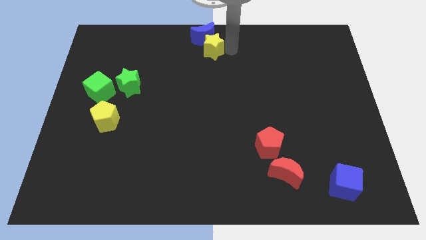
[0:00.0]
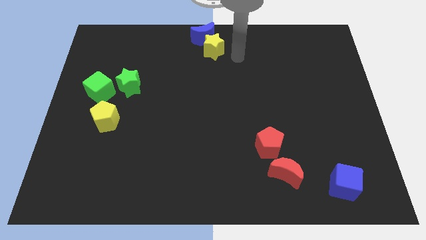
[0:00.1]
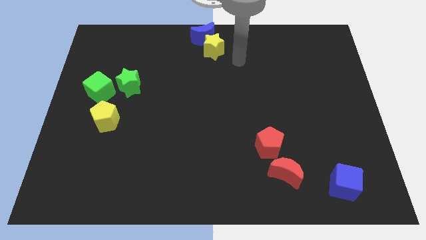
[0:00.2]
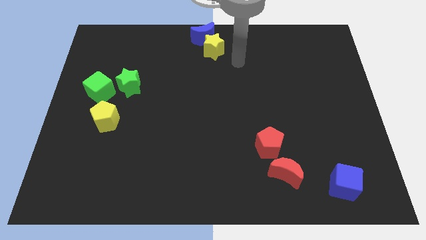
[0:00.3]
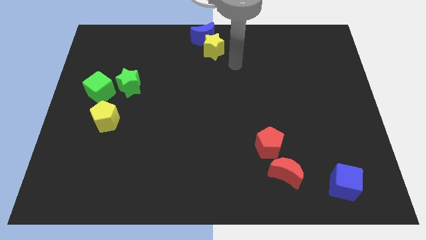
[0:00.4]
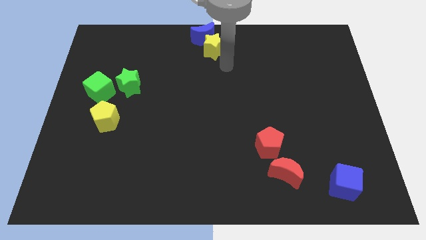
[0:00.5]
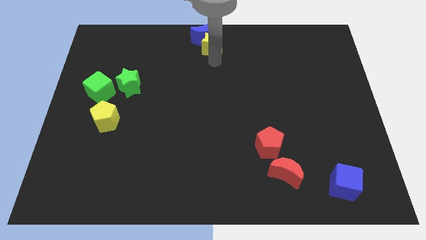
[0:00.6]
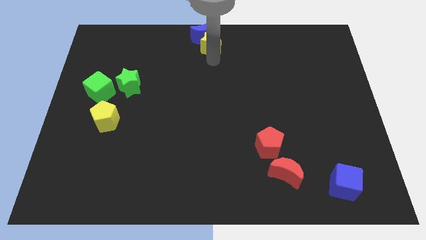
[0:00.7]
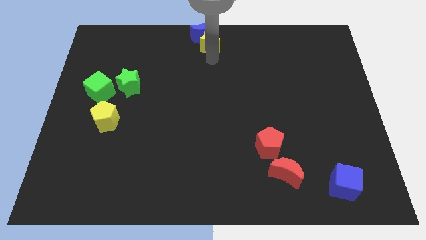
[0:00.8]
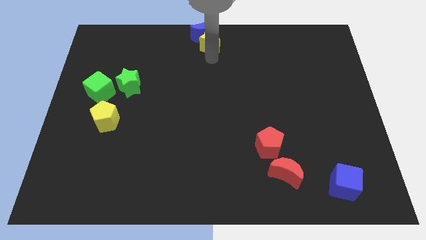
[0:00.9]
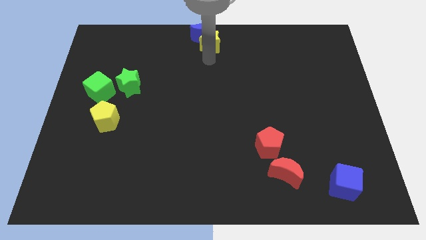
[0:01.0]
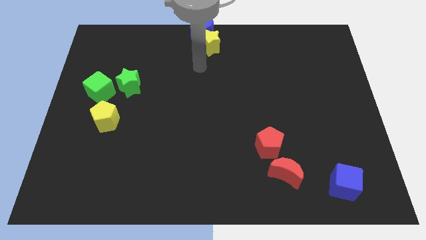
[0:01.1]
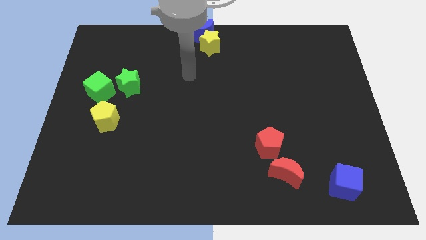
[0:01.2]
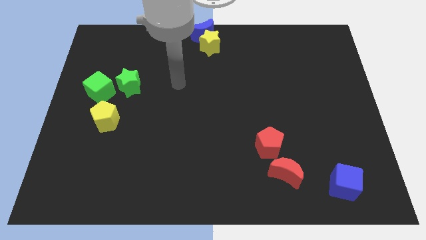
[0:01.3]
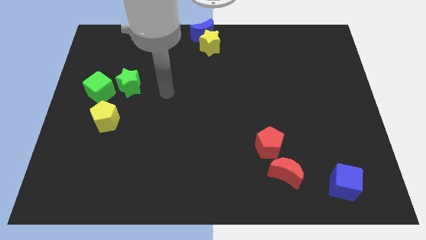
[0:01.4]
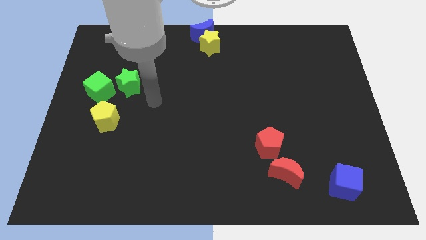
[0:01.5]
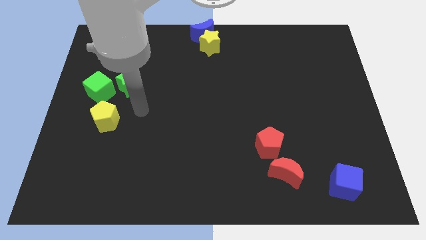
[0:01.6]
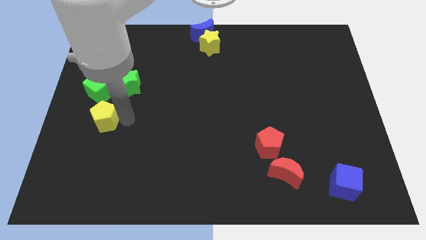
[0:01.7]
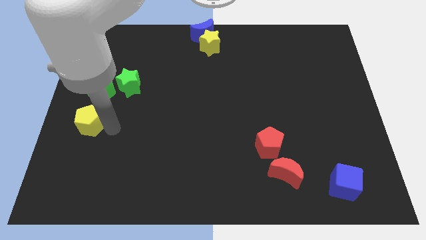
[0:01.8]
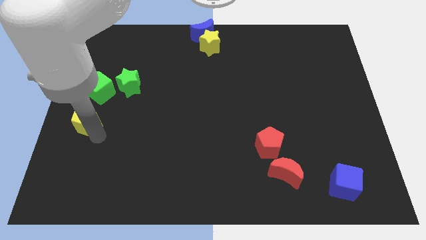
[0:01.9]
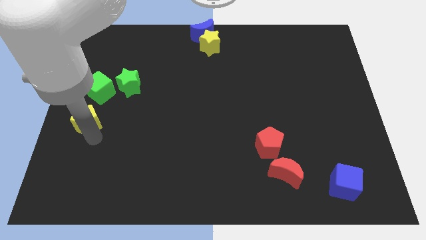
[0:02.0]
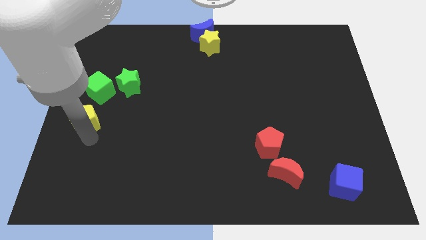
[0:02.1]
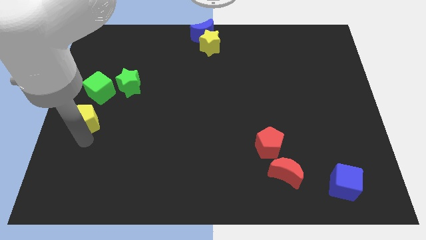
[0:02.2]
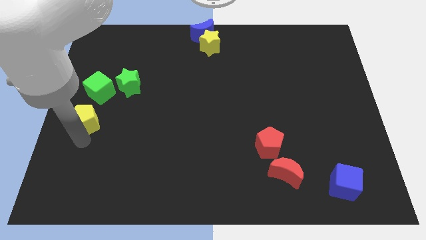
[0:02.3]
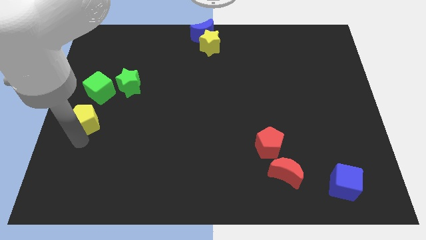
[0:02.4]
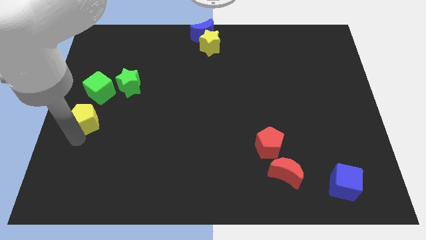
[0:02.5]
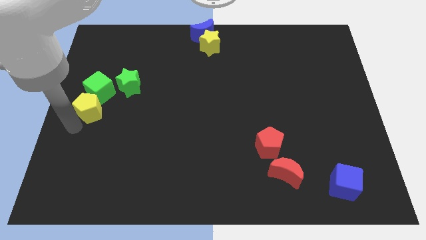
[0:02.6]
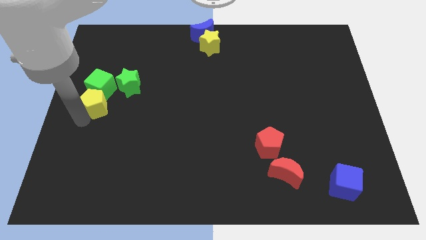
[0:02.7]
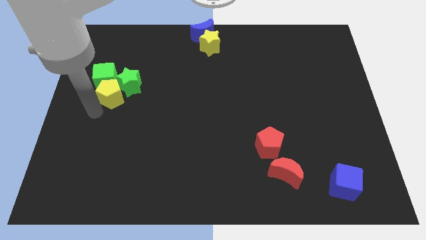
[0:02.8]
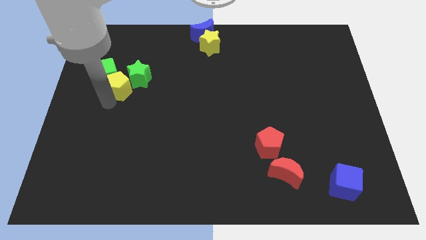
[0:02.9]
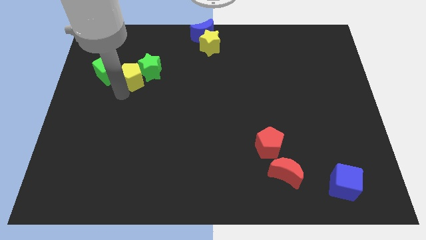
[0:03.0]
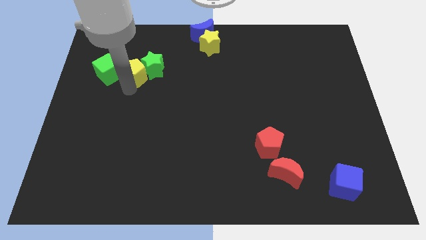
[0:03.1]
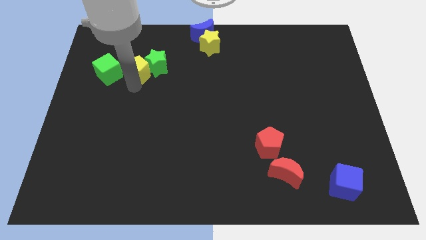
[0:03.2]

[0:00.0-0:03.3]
move the yellow pentagon into the green cube

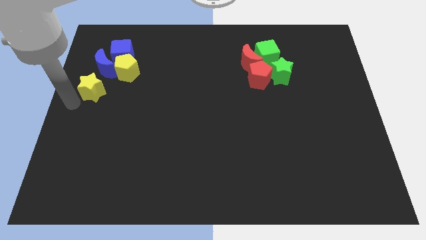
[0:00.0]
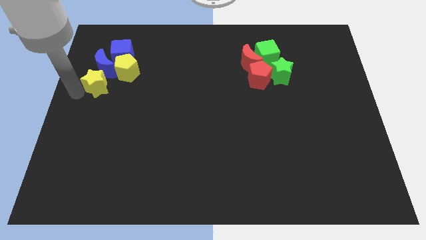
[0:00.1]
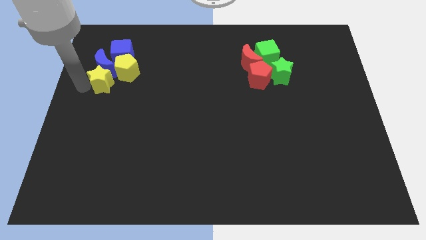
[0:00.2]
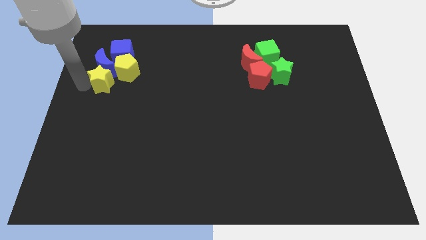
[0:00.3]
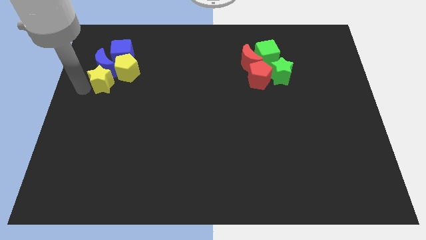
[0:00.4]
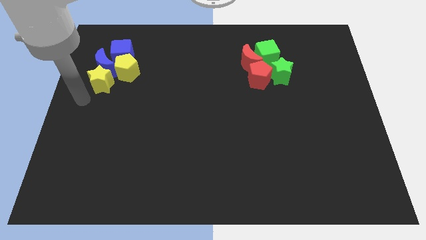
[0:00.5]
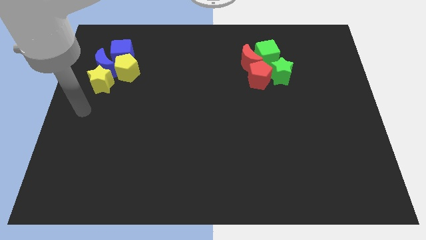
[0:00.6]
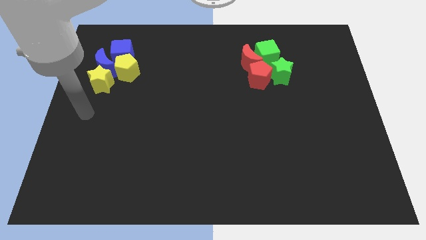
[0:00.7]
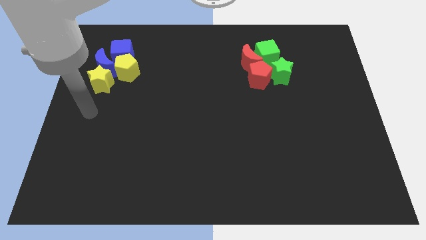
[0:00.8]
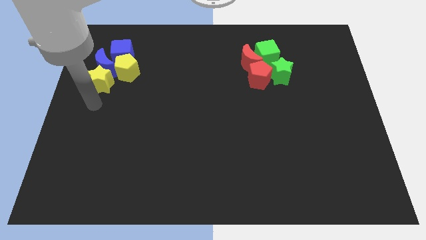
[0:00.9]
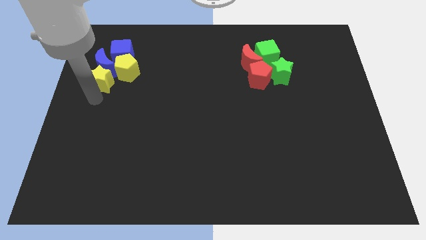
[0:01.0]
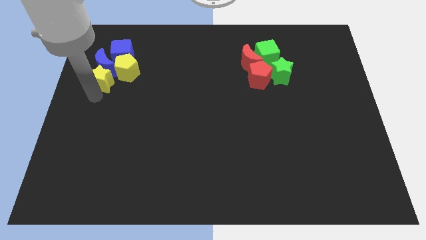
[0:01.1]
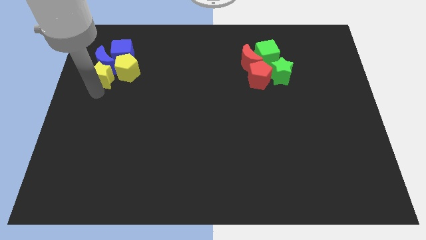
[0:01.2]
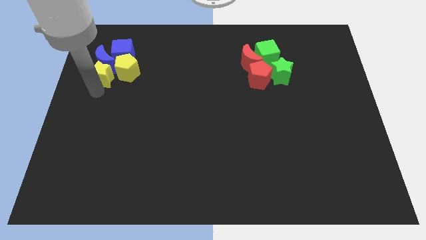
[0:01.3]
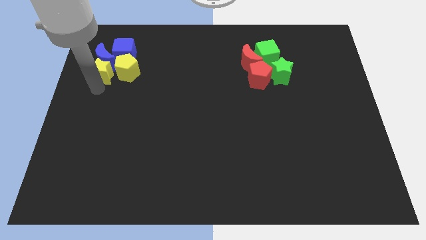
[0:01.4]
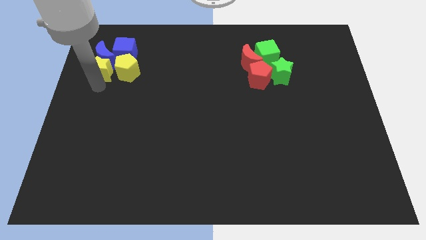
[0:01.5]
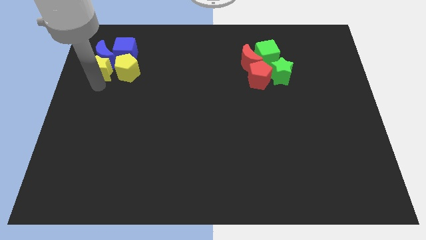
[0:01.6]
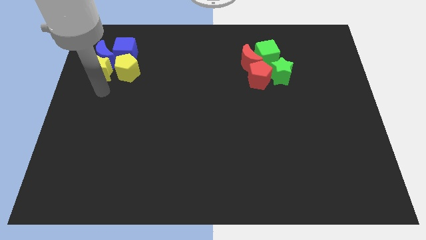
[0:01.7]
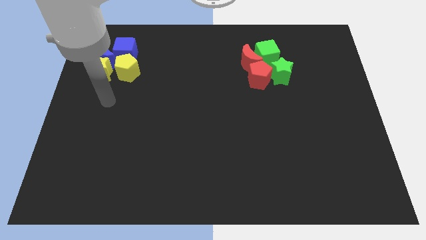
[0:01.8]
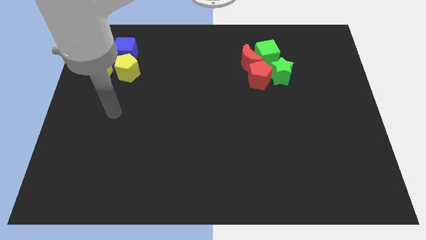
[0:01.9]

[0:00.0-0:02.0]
push the yellow star into the blue crescent

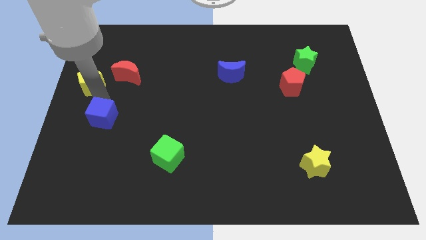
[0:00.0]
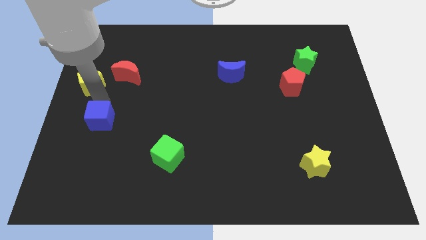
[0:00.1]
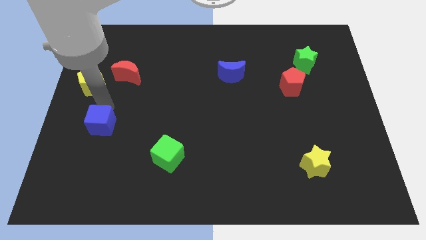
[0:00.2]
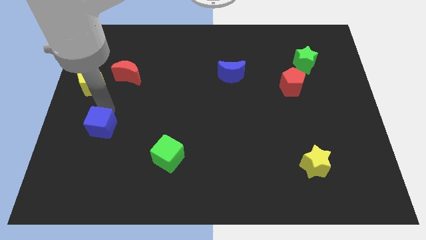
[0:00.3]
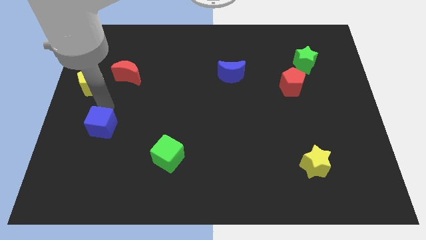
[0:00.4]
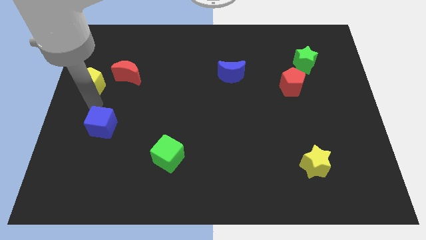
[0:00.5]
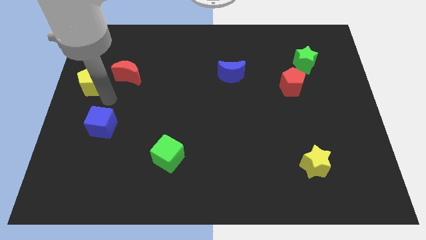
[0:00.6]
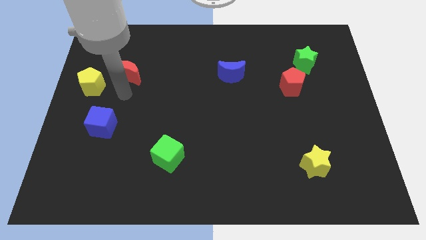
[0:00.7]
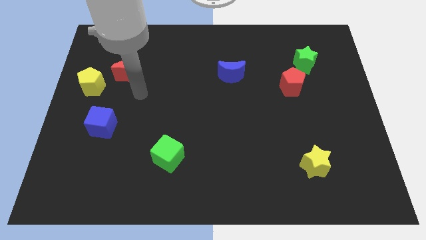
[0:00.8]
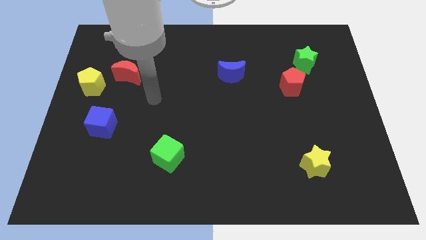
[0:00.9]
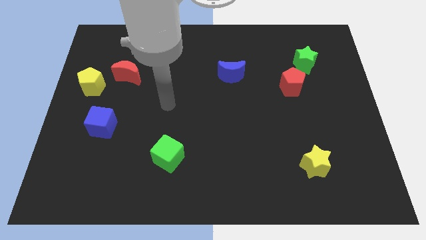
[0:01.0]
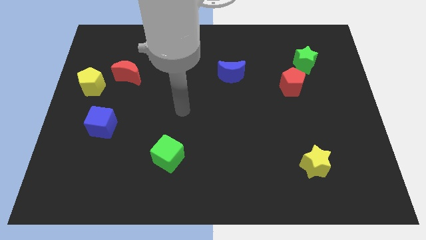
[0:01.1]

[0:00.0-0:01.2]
move the blue cube to the bottom side

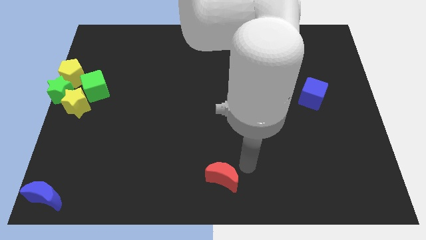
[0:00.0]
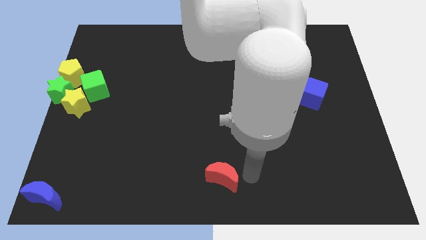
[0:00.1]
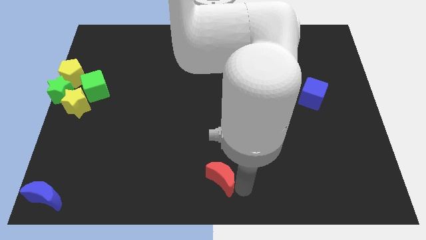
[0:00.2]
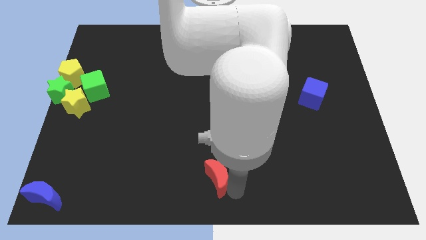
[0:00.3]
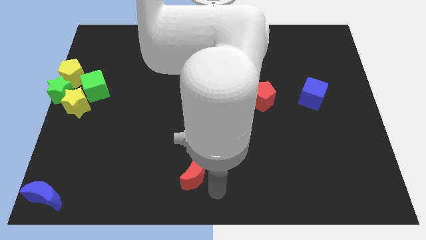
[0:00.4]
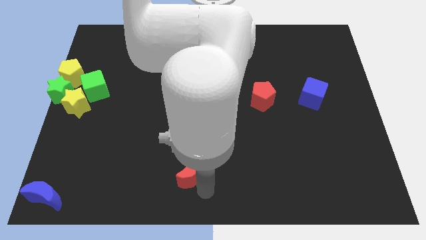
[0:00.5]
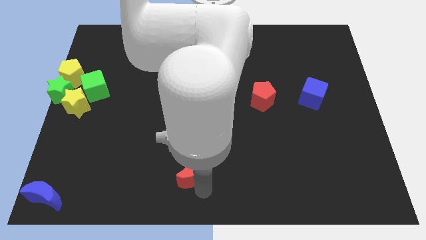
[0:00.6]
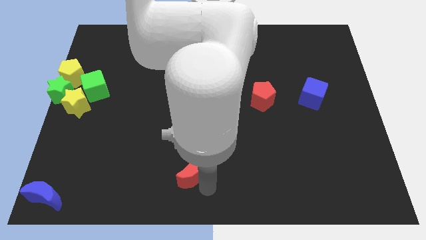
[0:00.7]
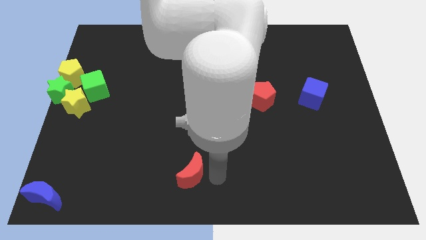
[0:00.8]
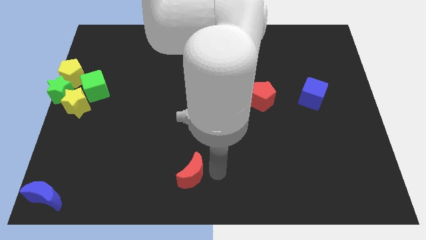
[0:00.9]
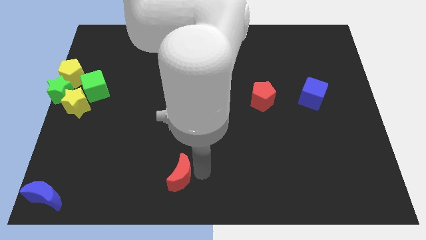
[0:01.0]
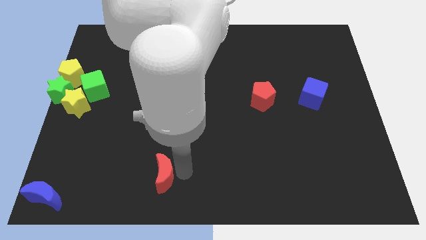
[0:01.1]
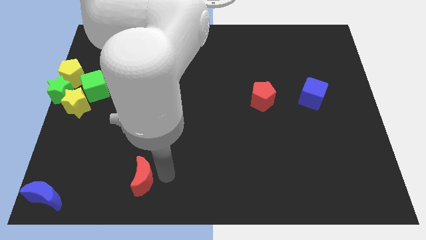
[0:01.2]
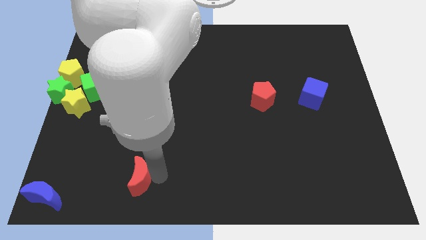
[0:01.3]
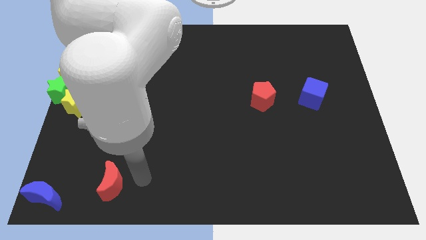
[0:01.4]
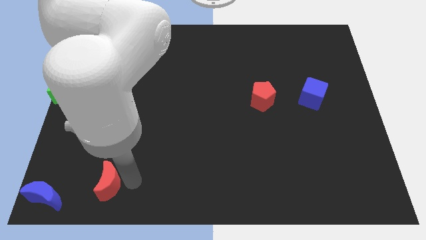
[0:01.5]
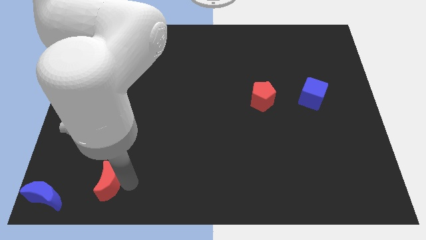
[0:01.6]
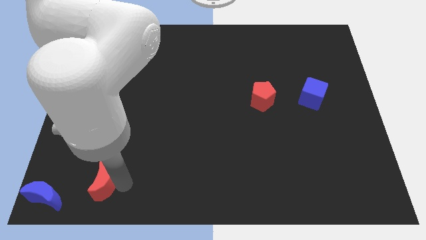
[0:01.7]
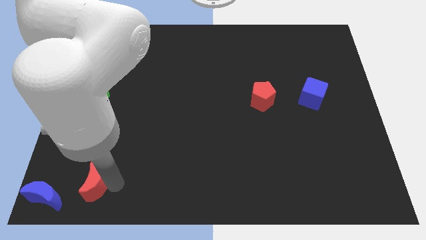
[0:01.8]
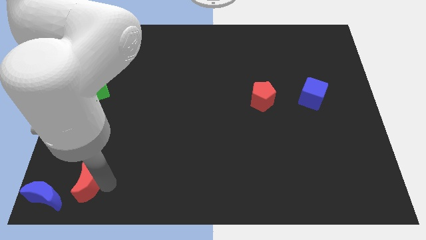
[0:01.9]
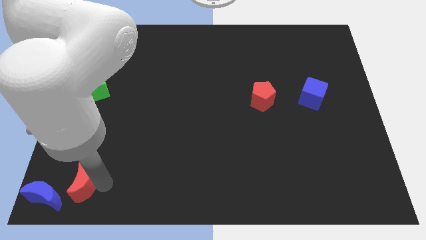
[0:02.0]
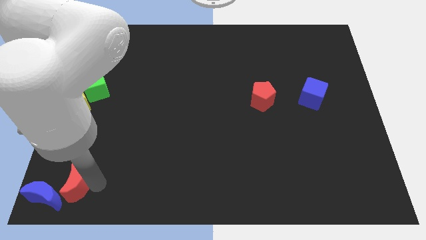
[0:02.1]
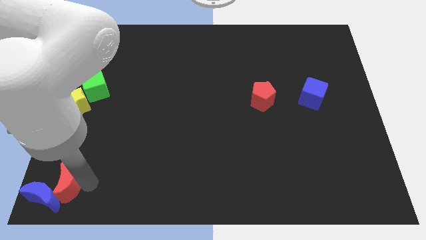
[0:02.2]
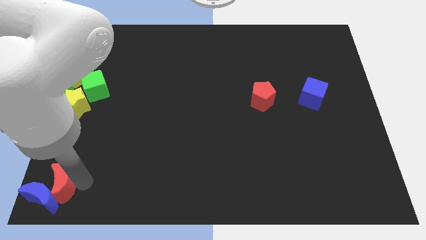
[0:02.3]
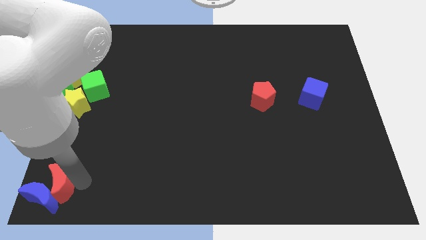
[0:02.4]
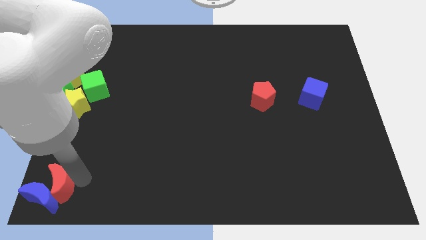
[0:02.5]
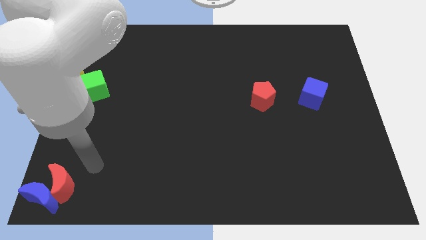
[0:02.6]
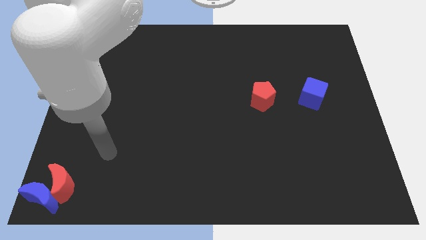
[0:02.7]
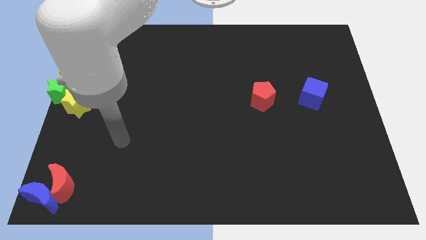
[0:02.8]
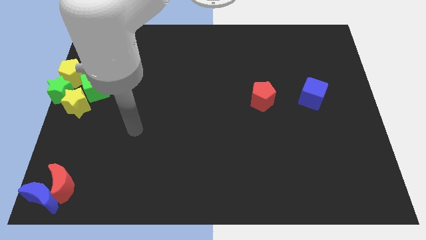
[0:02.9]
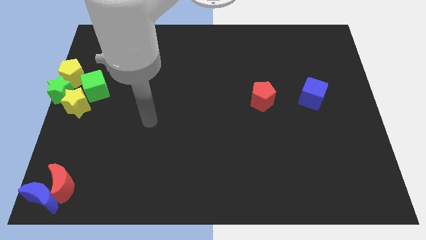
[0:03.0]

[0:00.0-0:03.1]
slide the red crescent to the bottom left of the board
